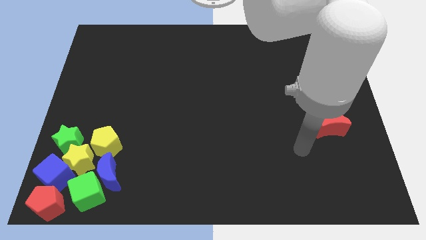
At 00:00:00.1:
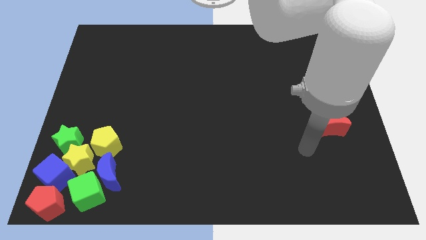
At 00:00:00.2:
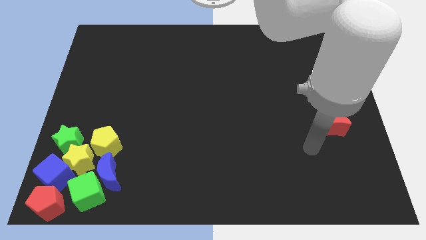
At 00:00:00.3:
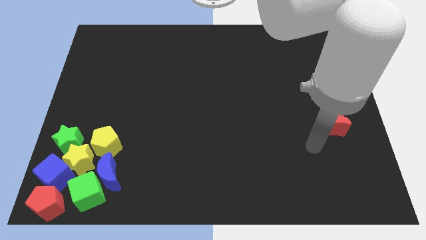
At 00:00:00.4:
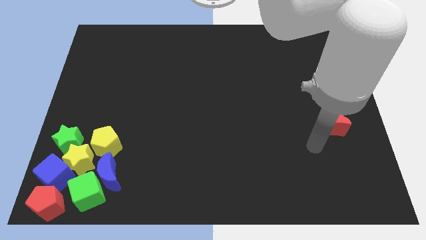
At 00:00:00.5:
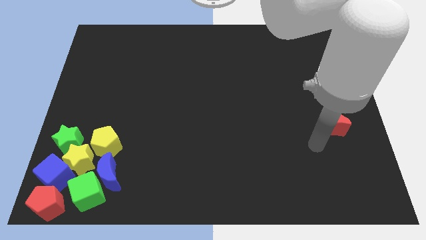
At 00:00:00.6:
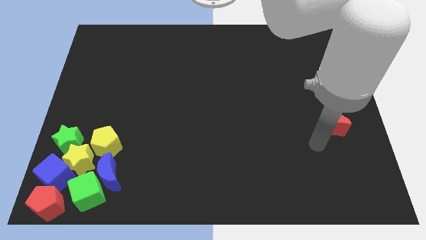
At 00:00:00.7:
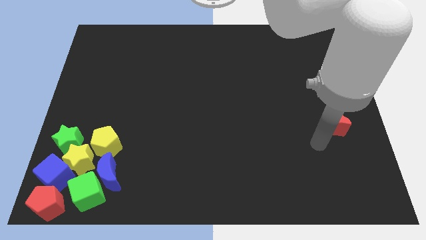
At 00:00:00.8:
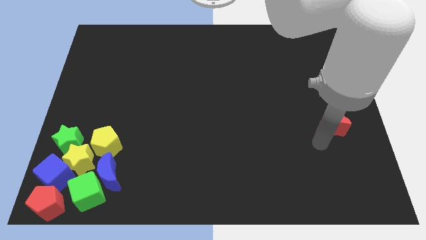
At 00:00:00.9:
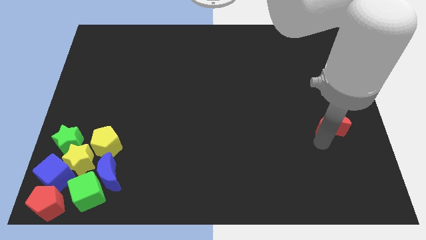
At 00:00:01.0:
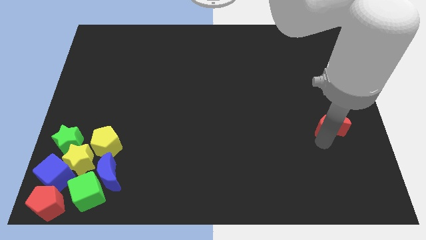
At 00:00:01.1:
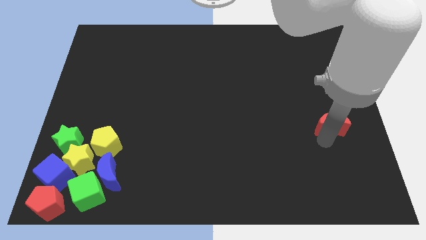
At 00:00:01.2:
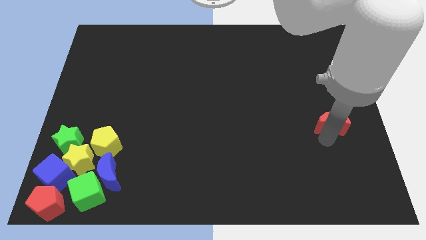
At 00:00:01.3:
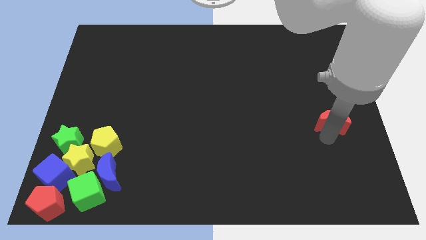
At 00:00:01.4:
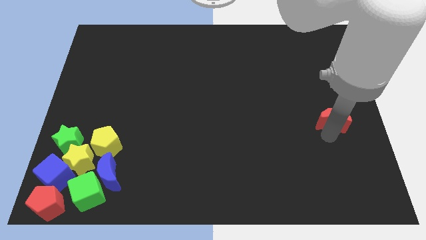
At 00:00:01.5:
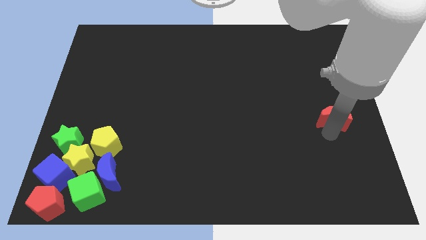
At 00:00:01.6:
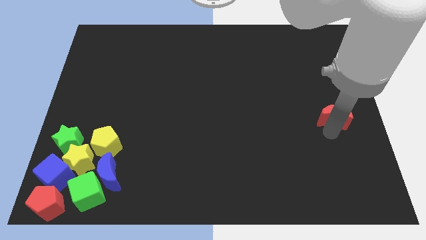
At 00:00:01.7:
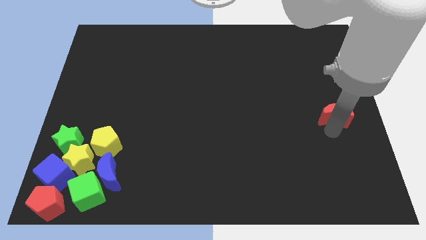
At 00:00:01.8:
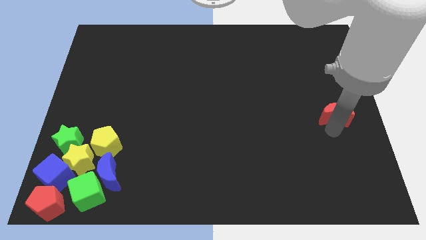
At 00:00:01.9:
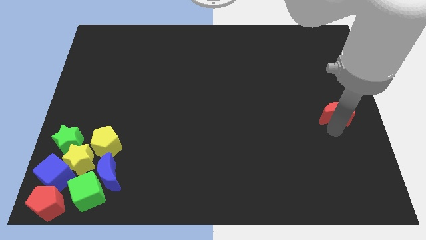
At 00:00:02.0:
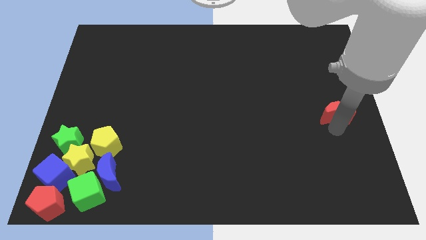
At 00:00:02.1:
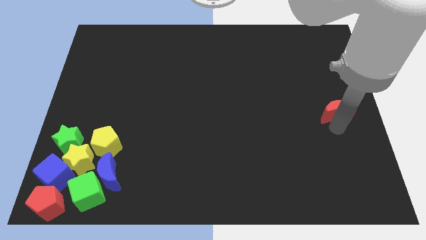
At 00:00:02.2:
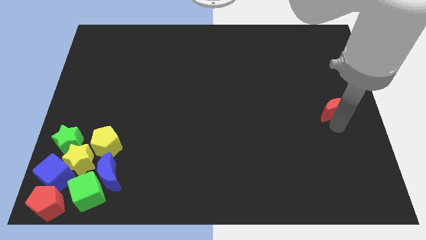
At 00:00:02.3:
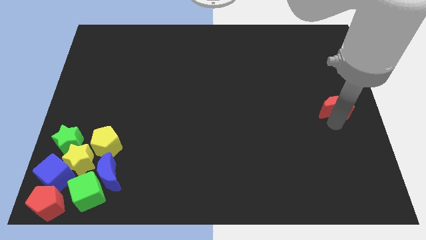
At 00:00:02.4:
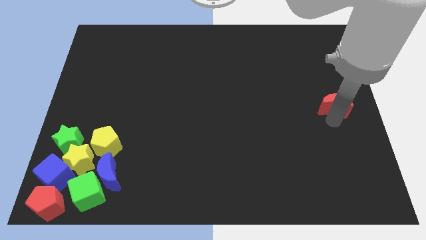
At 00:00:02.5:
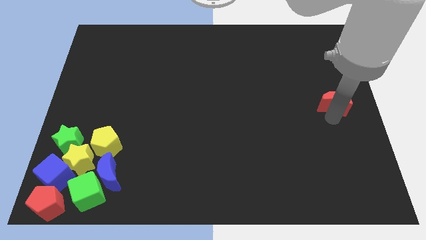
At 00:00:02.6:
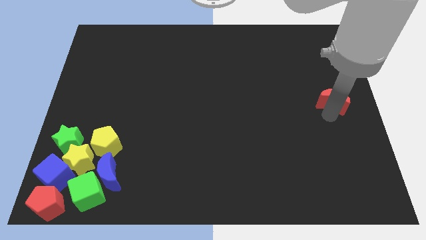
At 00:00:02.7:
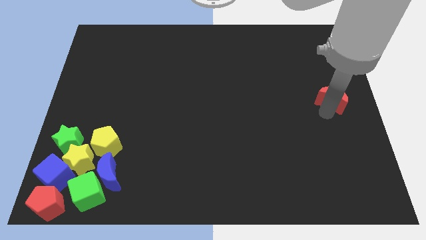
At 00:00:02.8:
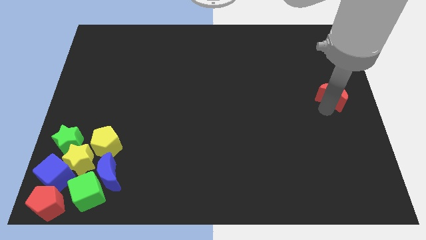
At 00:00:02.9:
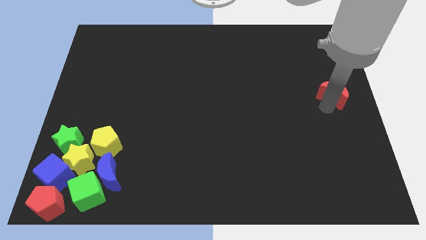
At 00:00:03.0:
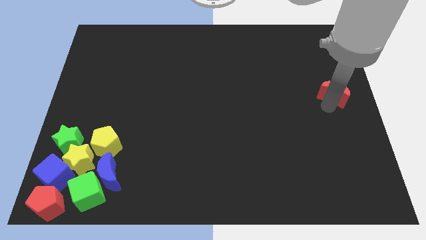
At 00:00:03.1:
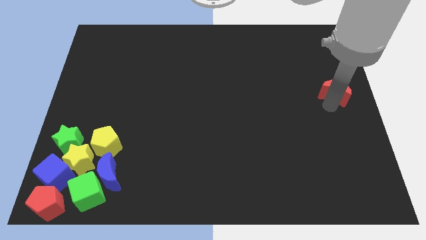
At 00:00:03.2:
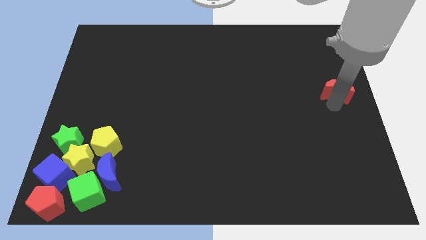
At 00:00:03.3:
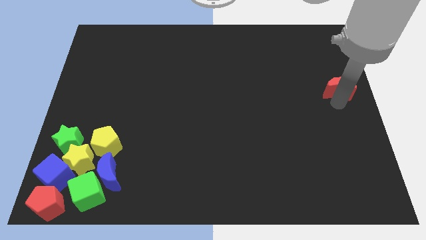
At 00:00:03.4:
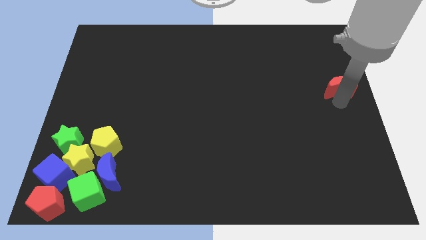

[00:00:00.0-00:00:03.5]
drag the red crescent towards the top

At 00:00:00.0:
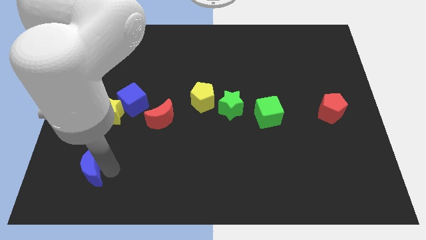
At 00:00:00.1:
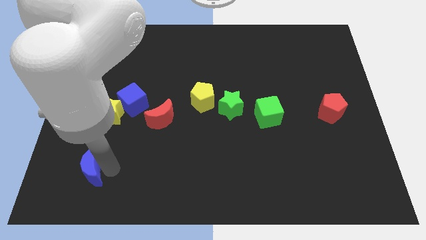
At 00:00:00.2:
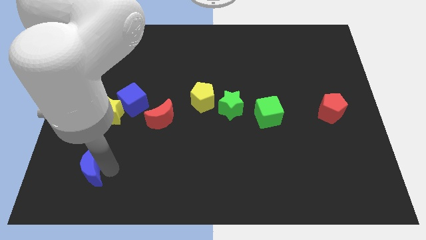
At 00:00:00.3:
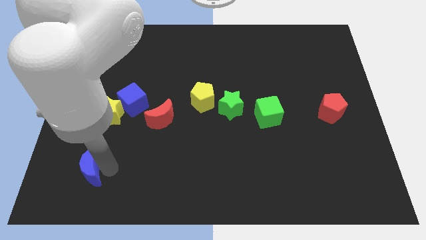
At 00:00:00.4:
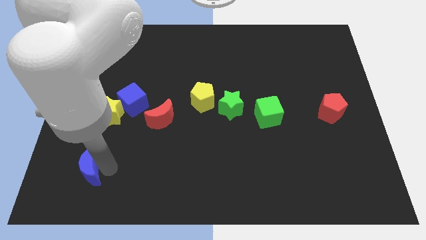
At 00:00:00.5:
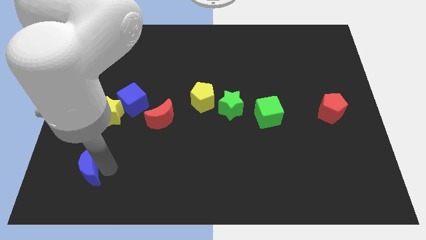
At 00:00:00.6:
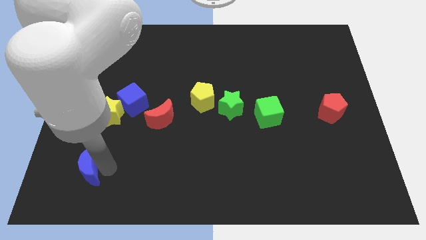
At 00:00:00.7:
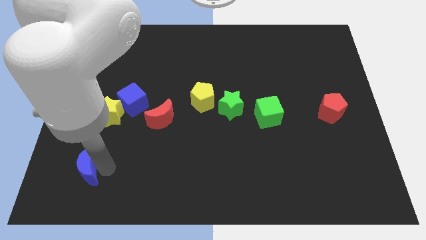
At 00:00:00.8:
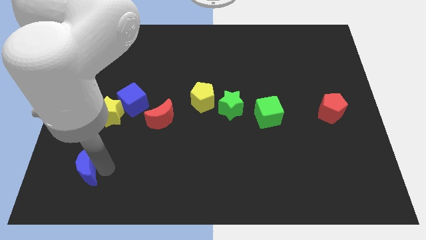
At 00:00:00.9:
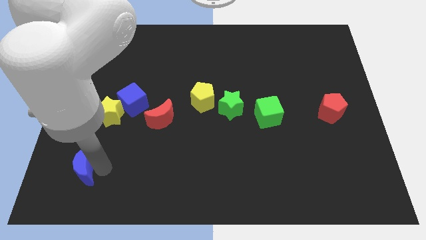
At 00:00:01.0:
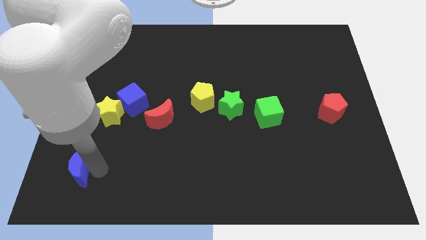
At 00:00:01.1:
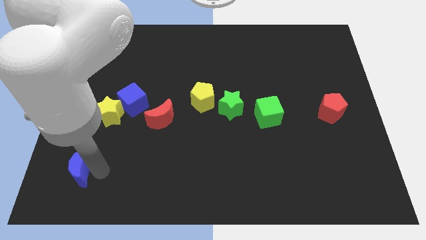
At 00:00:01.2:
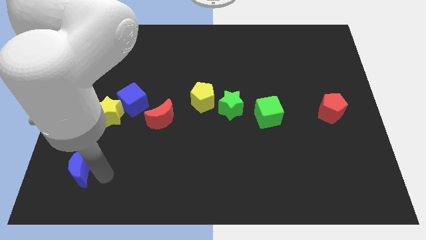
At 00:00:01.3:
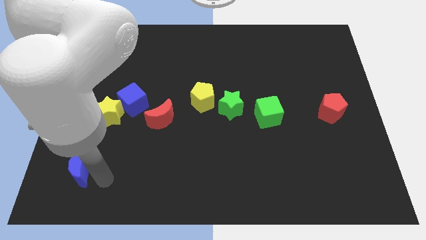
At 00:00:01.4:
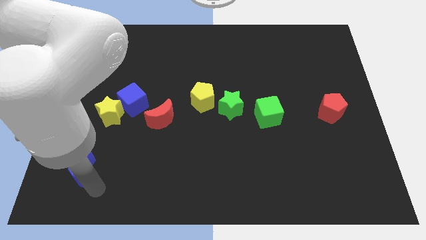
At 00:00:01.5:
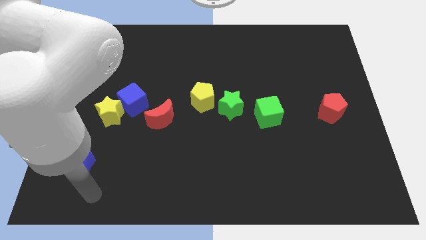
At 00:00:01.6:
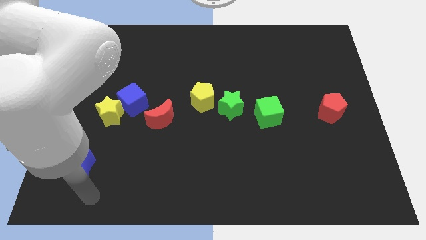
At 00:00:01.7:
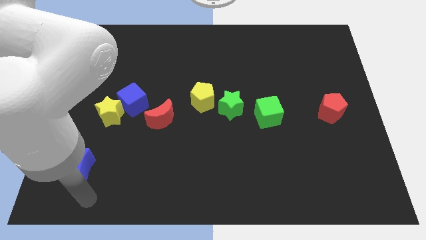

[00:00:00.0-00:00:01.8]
move the blue moon slightly to the left of the board

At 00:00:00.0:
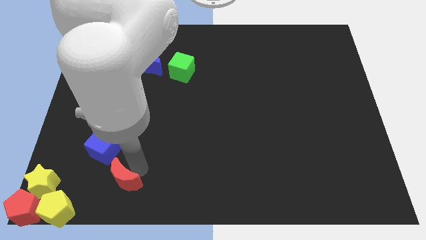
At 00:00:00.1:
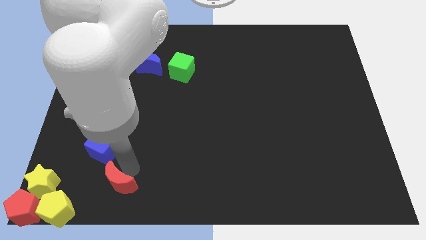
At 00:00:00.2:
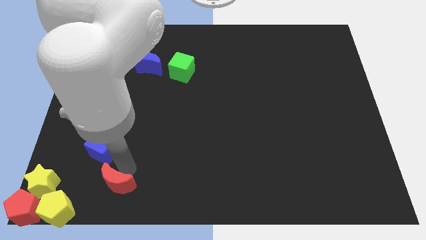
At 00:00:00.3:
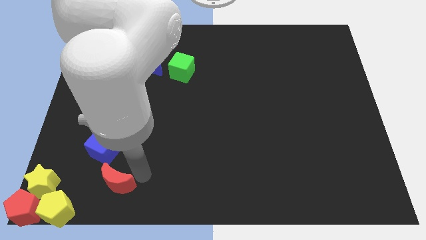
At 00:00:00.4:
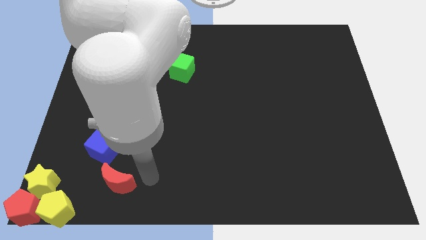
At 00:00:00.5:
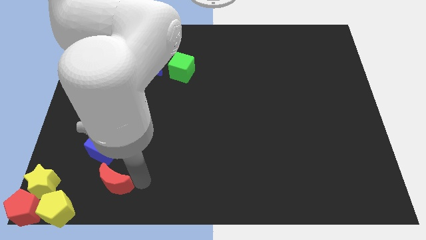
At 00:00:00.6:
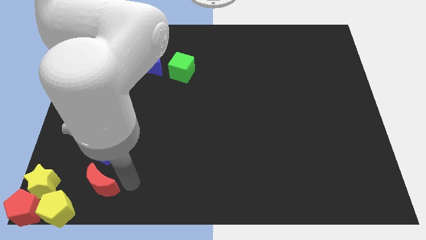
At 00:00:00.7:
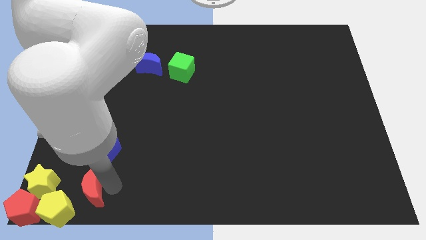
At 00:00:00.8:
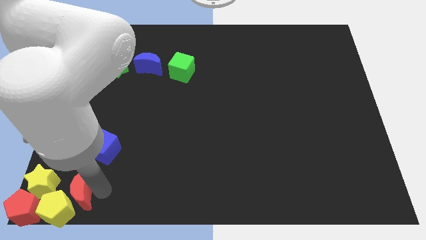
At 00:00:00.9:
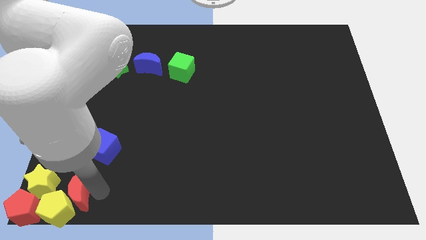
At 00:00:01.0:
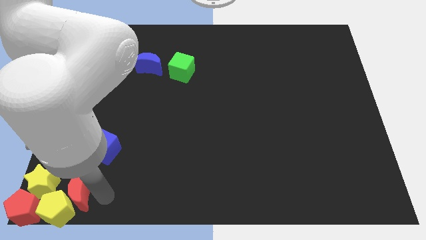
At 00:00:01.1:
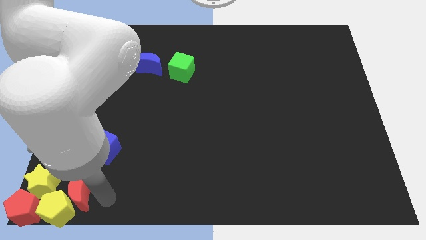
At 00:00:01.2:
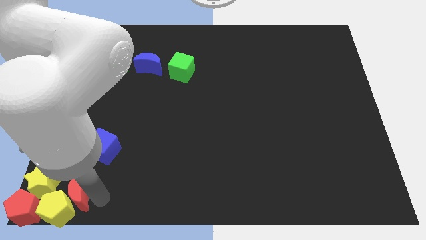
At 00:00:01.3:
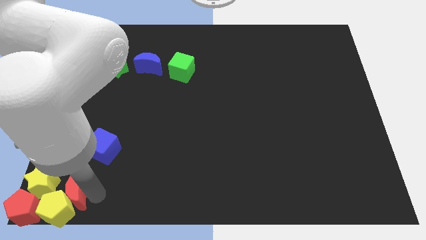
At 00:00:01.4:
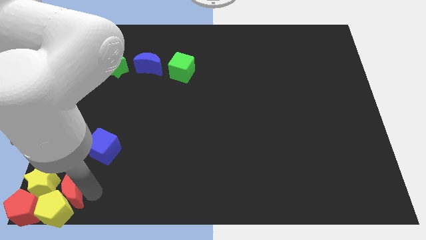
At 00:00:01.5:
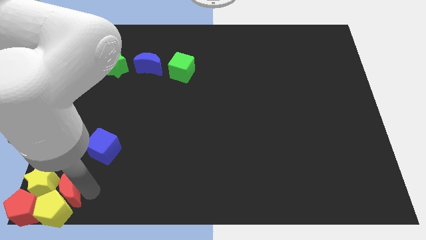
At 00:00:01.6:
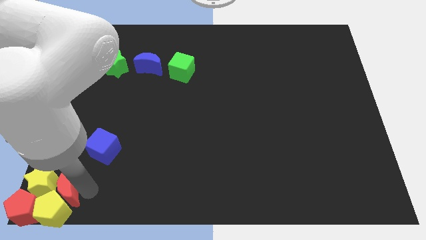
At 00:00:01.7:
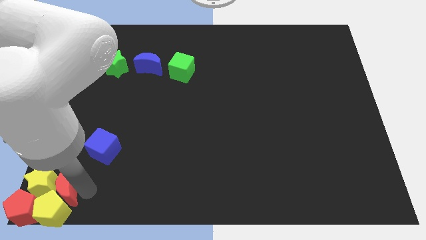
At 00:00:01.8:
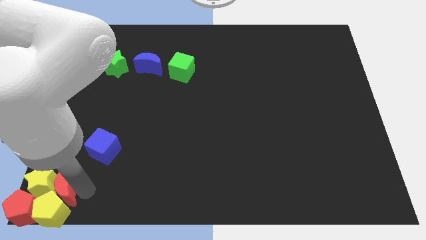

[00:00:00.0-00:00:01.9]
move the red crescent to the bottom left corner

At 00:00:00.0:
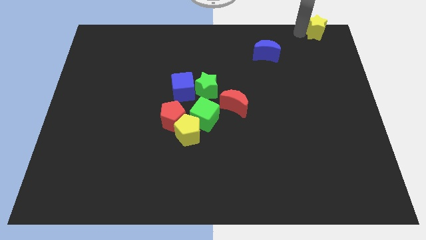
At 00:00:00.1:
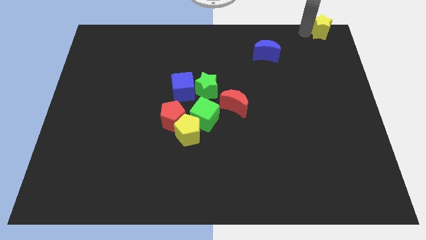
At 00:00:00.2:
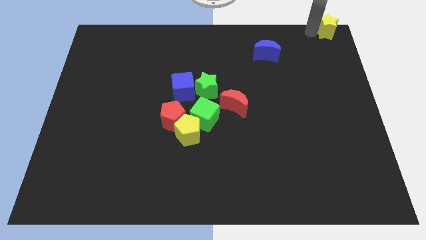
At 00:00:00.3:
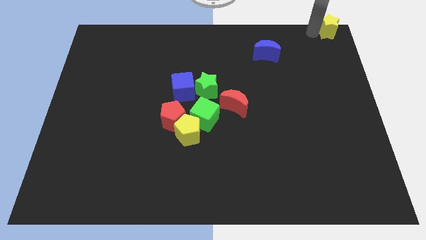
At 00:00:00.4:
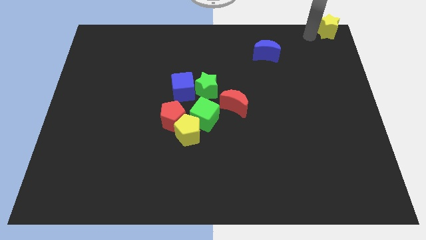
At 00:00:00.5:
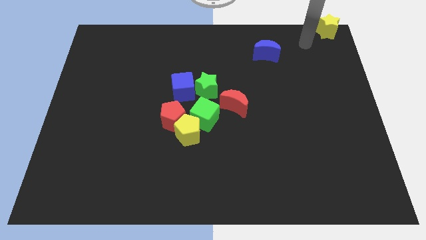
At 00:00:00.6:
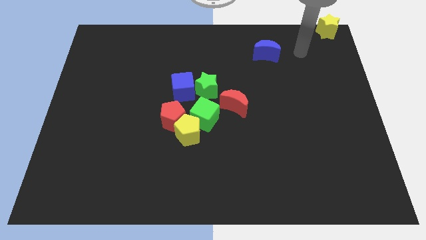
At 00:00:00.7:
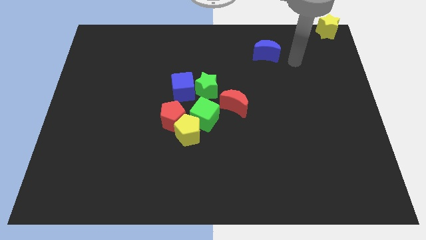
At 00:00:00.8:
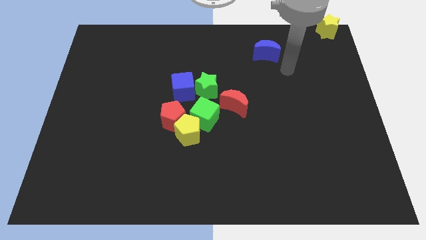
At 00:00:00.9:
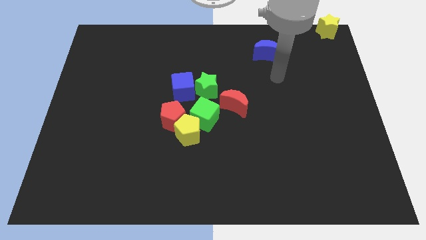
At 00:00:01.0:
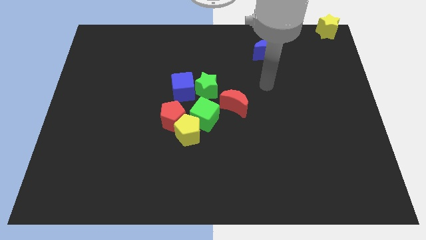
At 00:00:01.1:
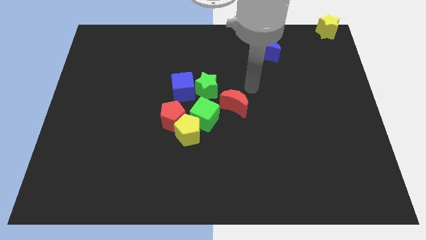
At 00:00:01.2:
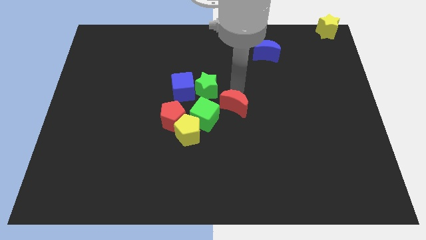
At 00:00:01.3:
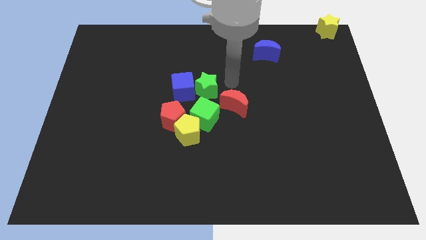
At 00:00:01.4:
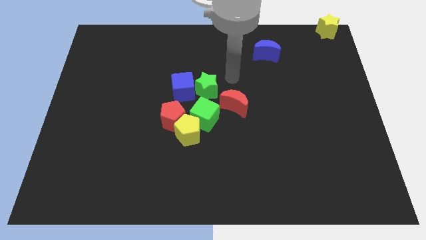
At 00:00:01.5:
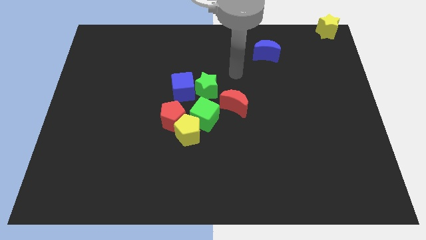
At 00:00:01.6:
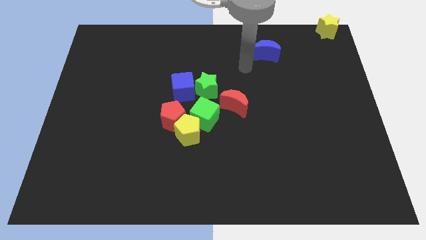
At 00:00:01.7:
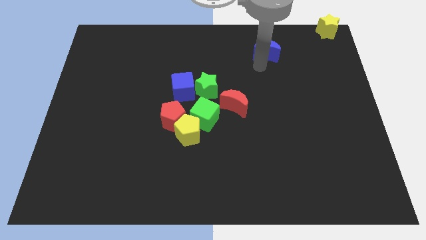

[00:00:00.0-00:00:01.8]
move yourself away from the yellow star
